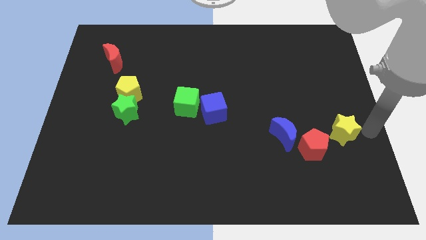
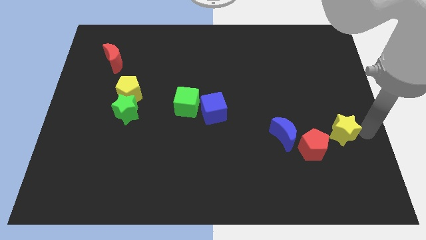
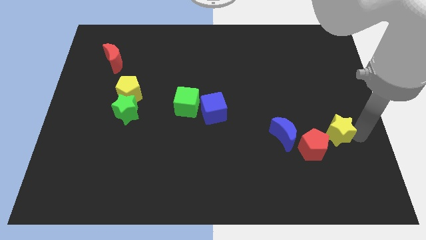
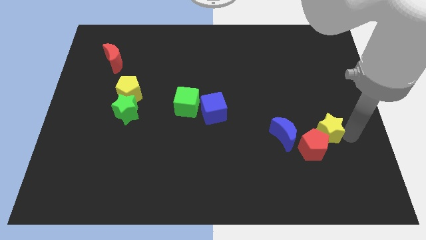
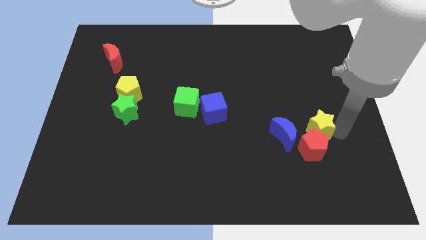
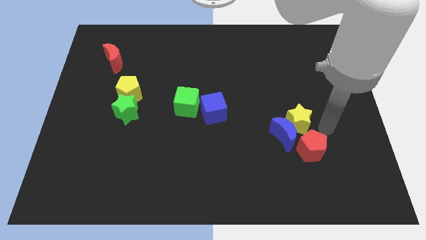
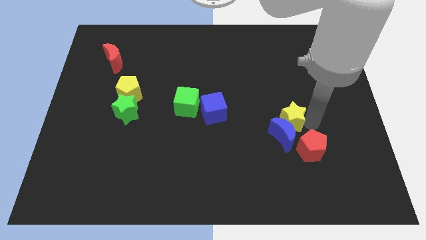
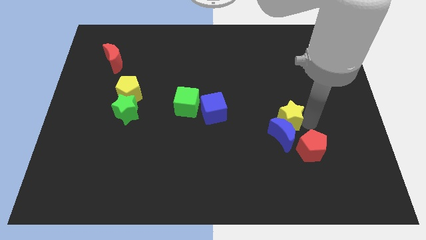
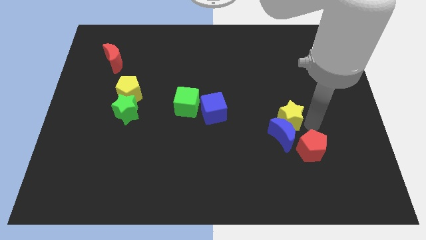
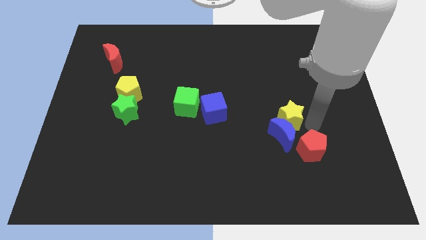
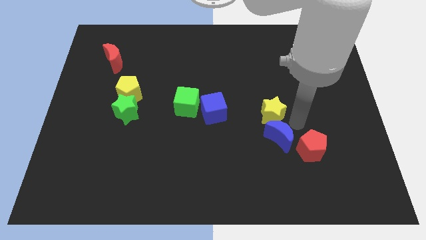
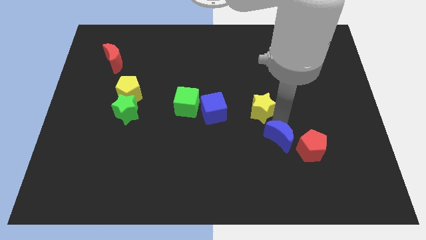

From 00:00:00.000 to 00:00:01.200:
separate yellow star from red pentagon

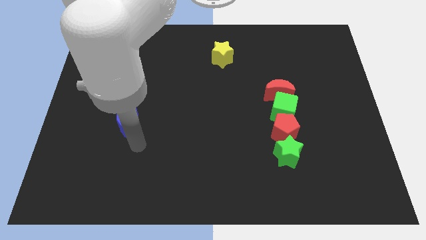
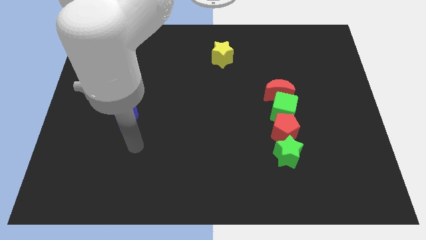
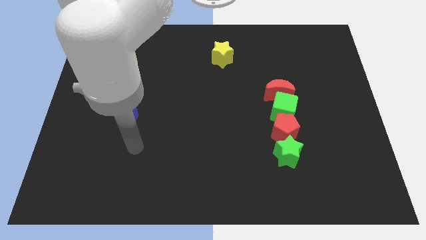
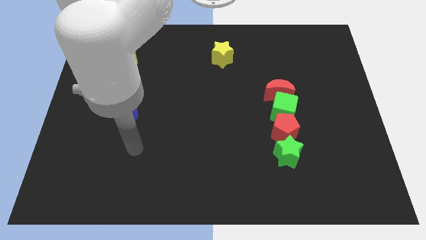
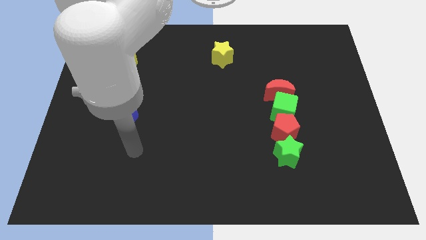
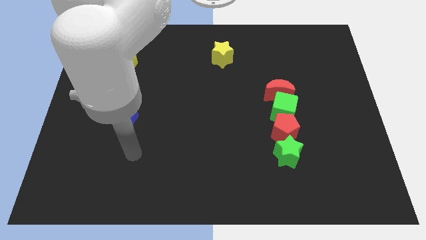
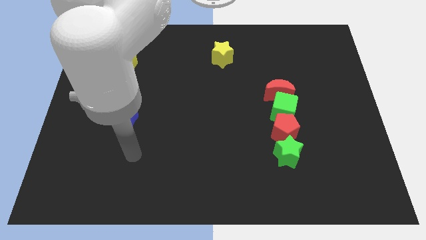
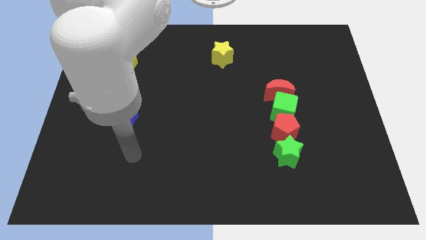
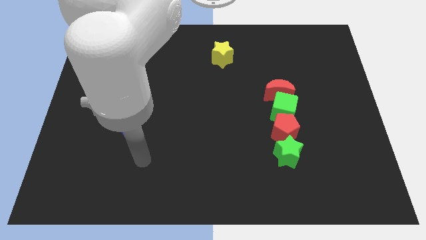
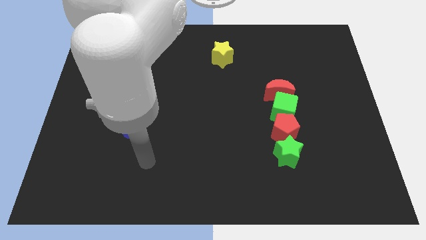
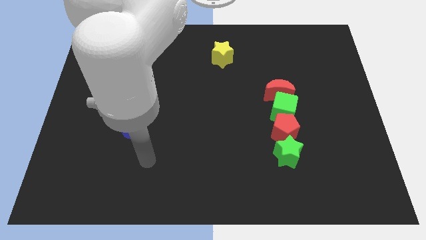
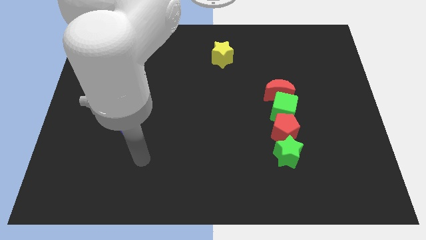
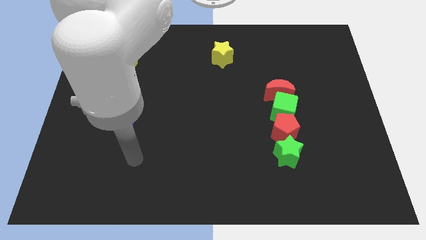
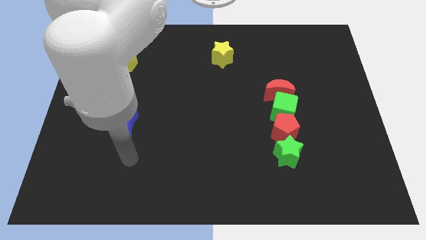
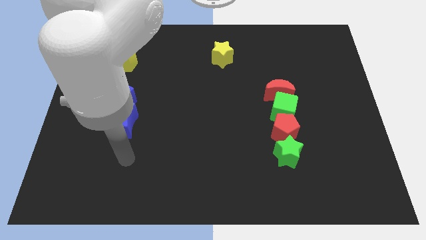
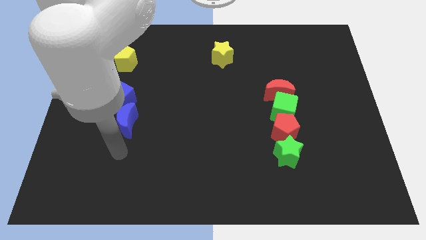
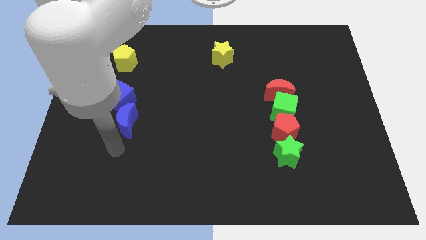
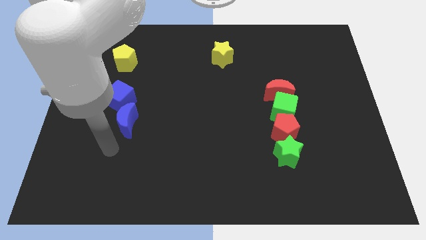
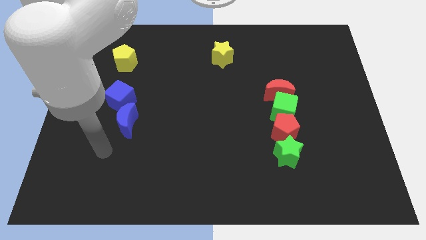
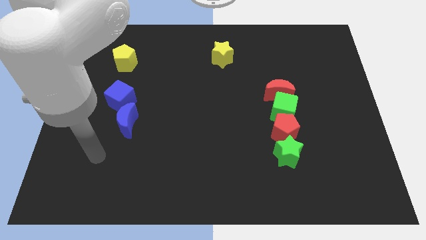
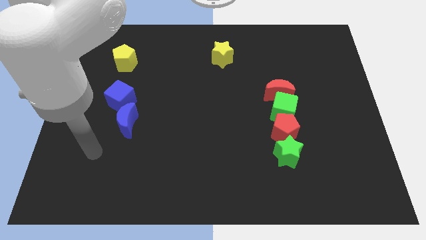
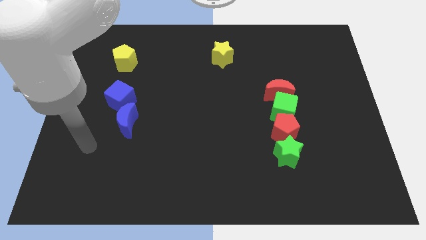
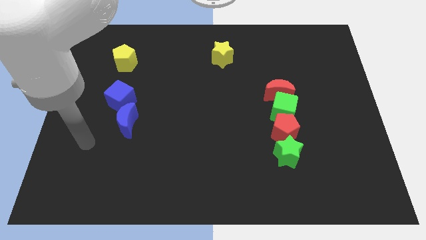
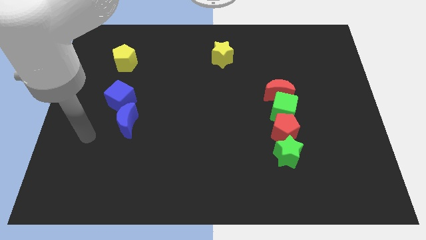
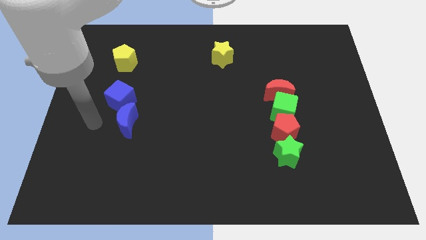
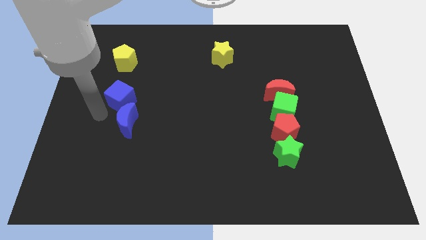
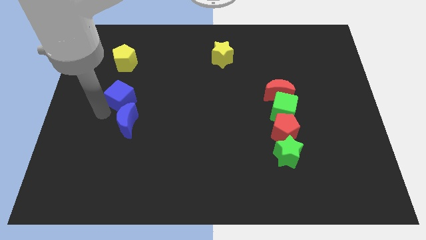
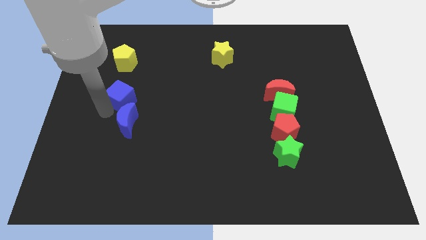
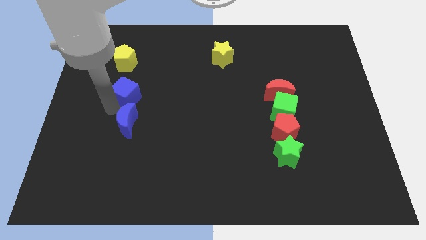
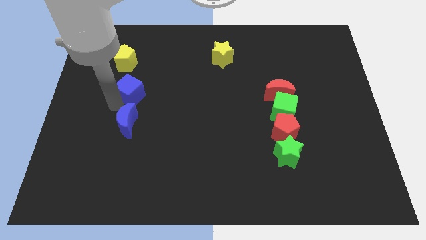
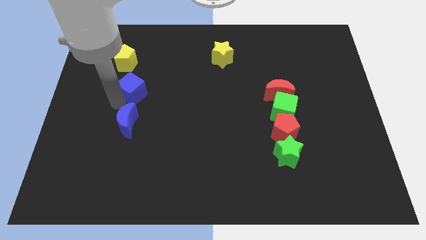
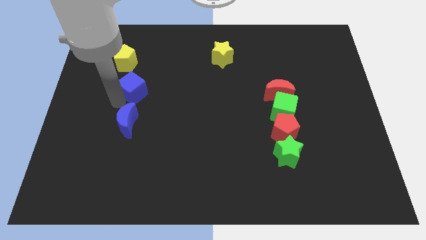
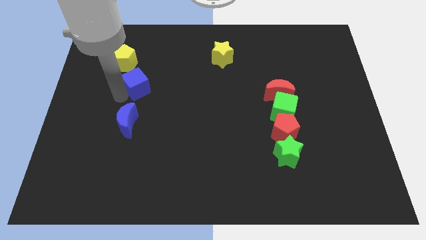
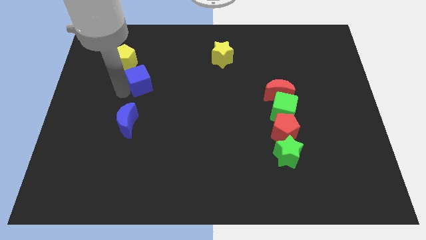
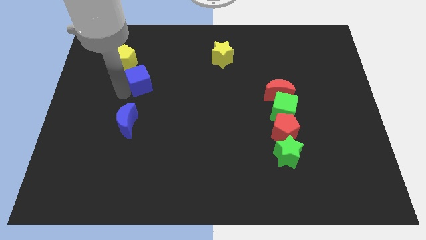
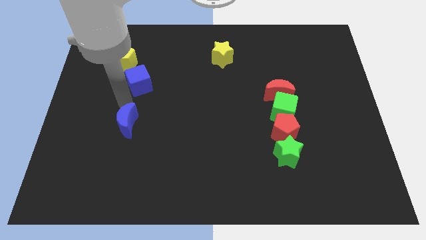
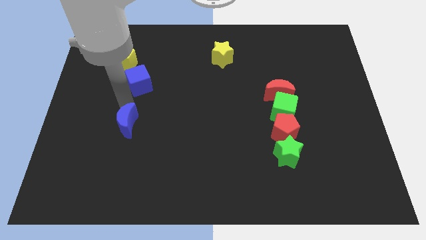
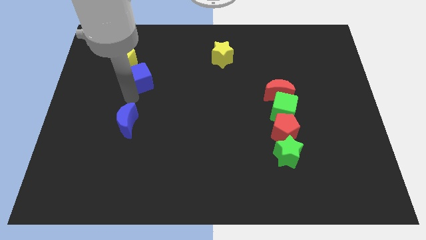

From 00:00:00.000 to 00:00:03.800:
separate blue cube from the blue moon

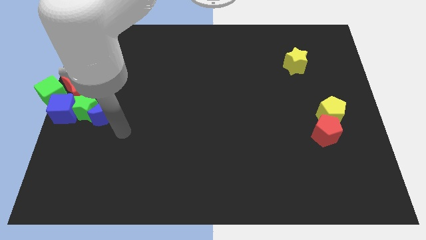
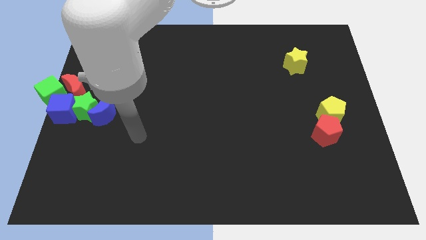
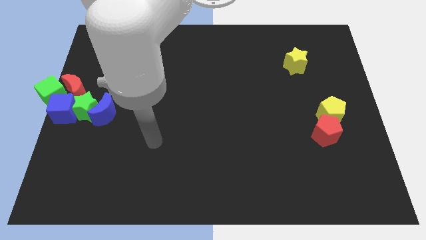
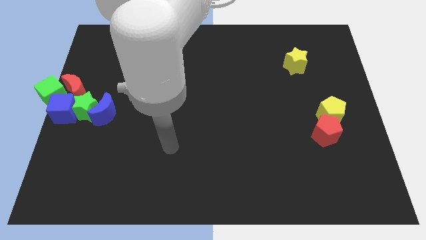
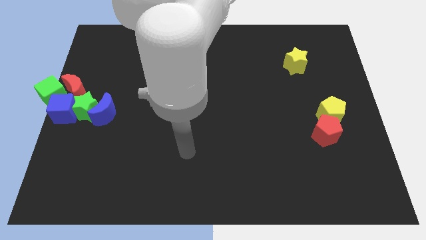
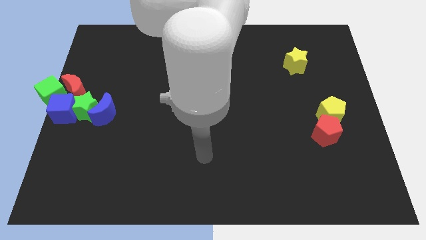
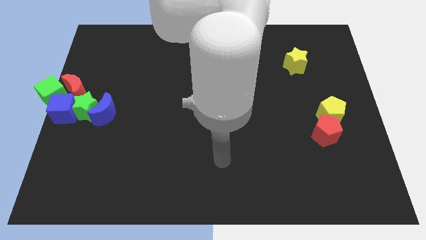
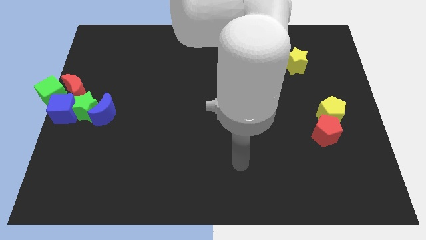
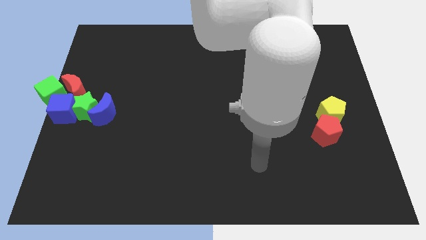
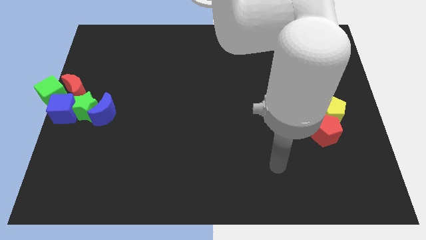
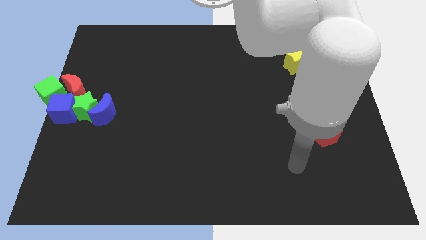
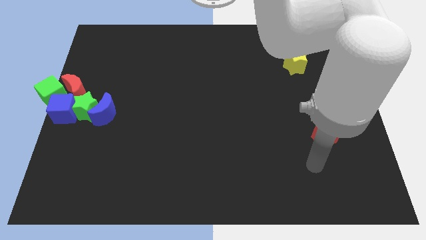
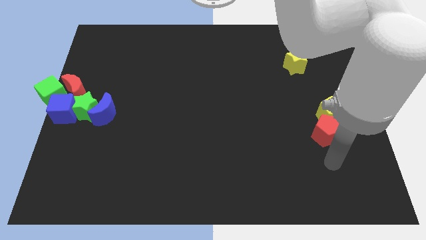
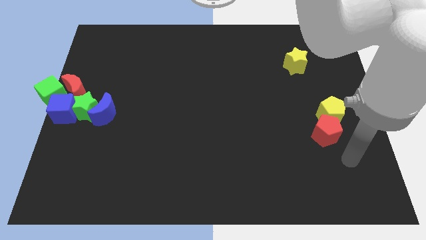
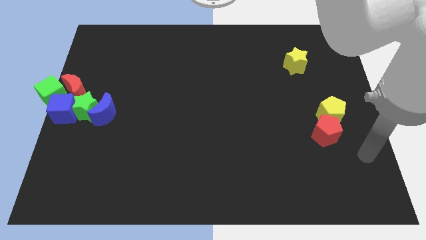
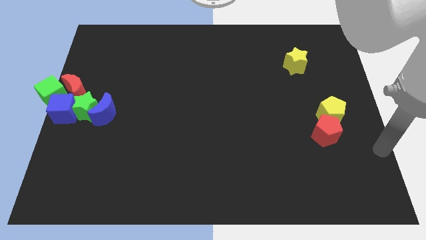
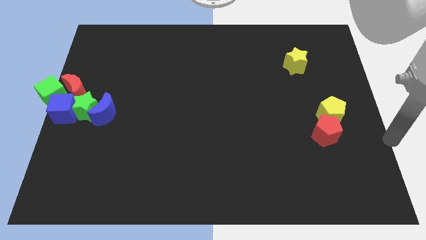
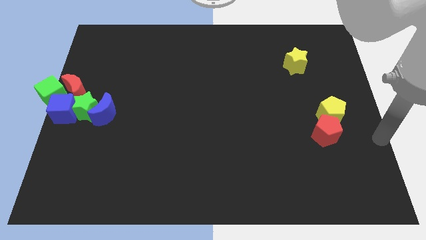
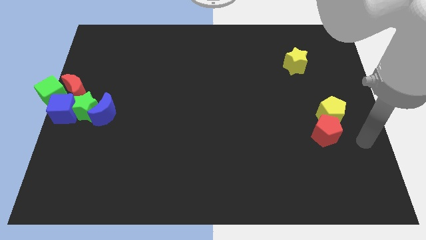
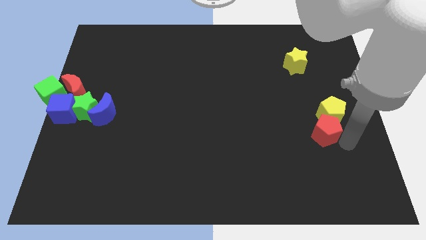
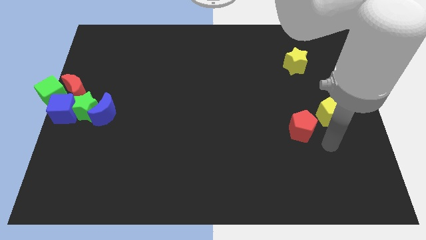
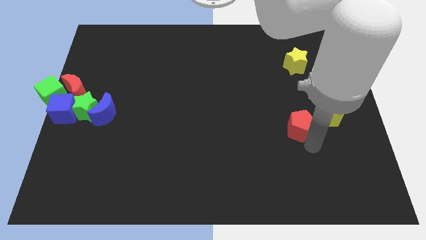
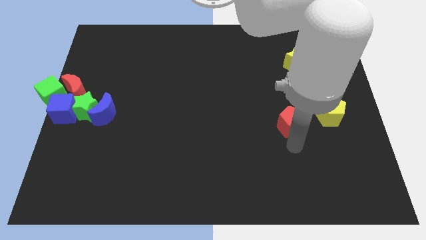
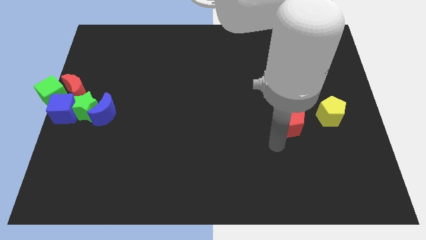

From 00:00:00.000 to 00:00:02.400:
hit the red pentagon

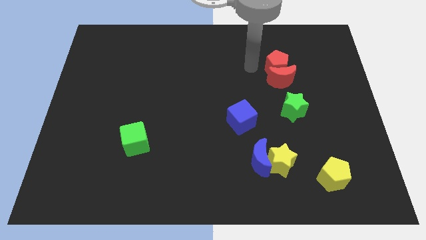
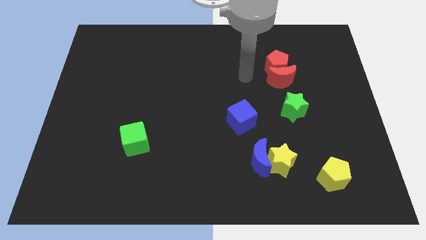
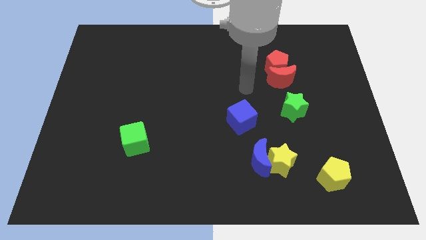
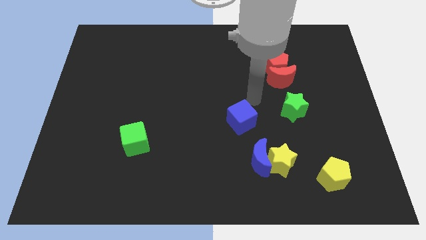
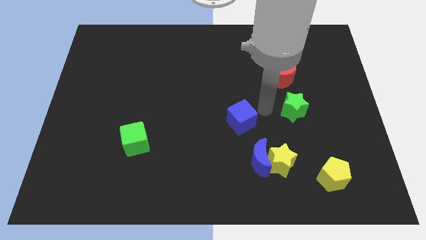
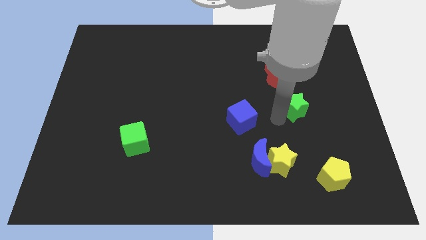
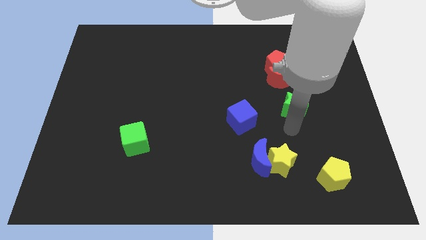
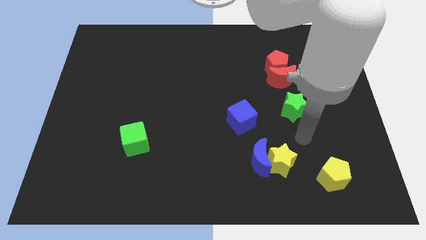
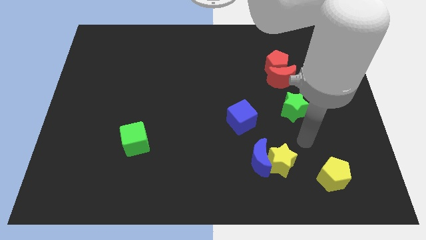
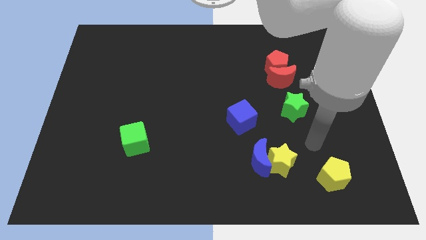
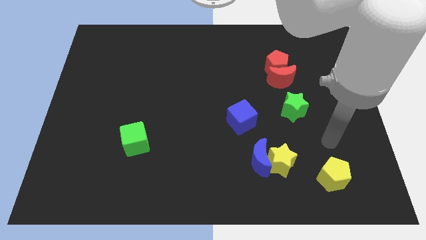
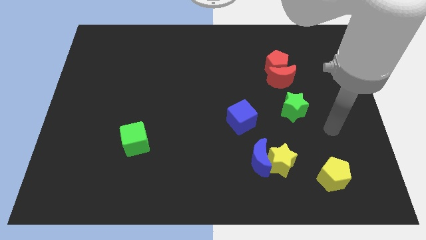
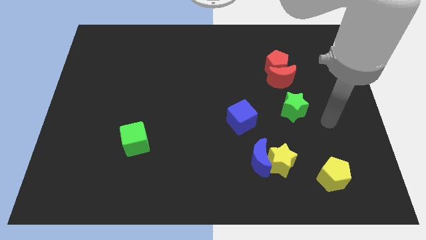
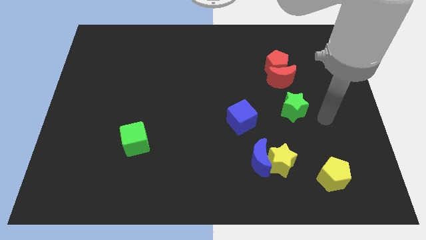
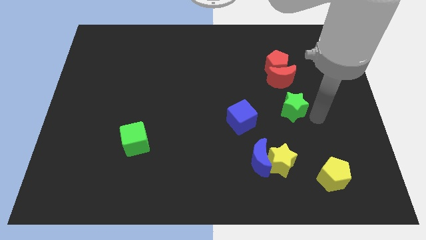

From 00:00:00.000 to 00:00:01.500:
place your hand at the bottom right side of the green star

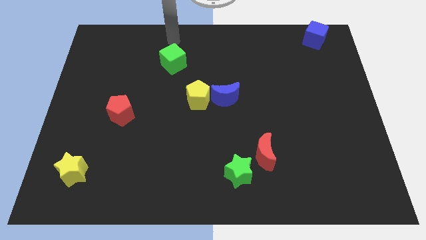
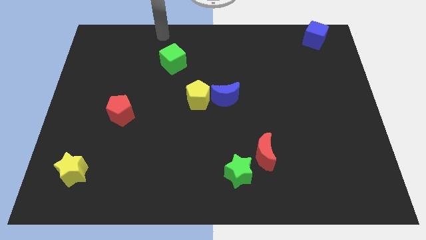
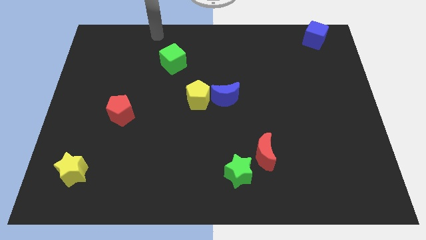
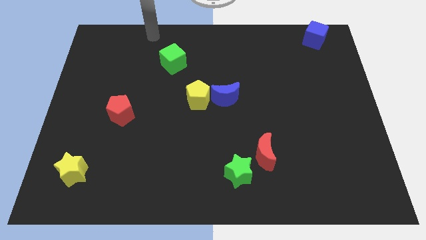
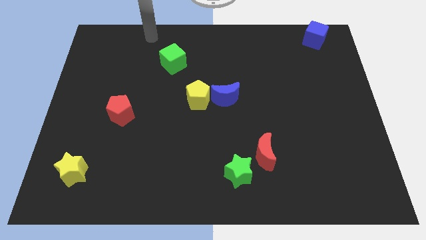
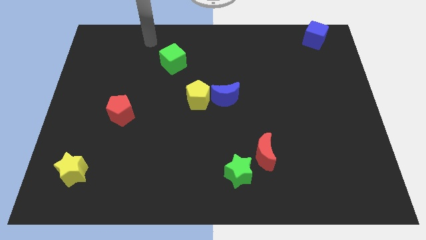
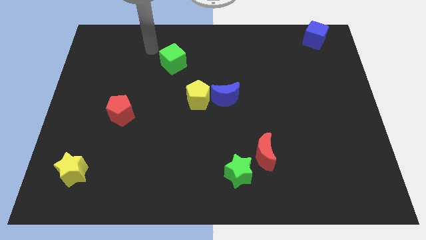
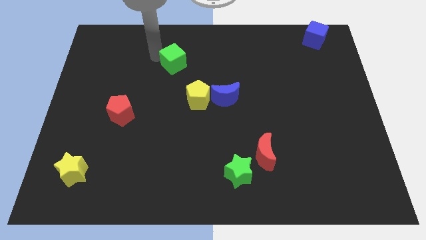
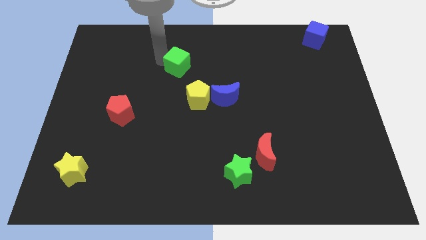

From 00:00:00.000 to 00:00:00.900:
touch the top of green cube
